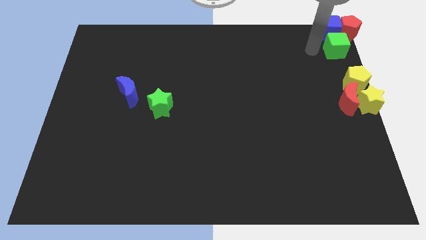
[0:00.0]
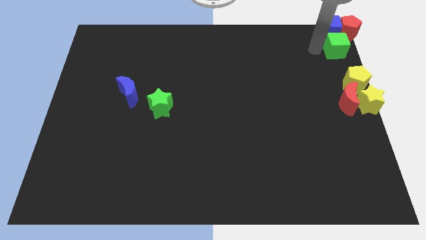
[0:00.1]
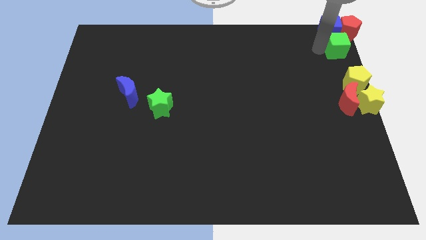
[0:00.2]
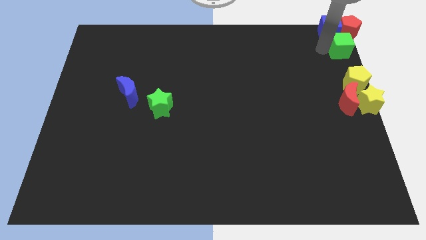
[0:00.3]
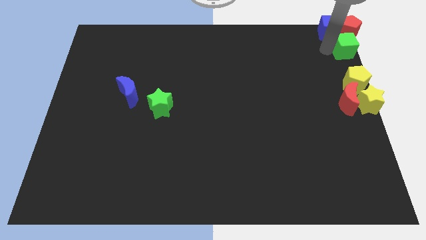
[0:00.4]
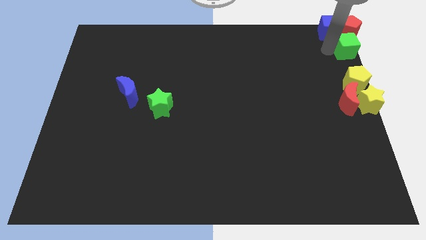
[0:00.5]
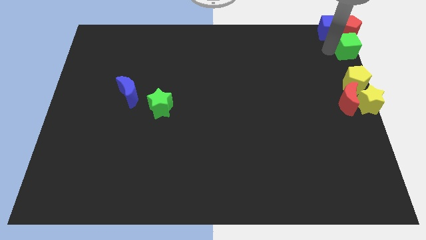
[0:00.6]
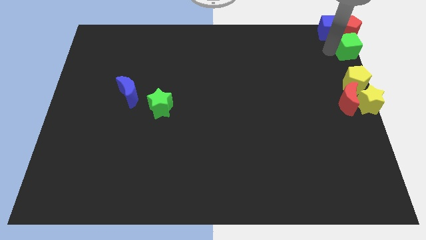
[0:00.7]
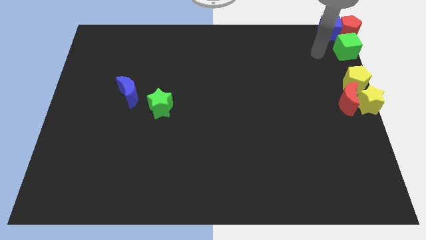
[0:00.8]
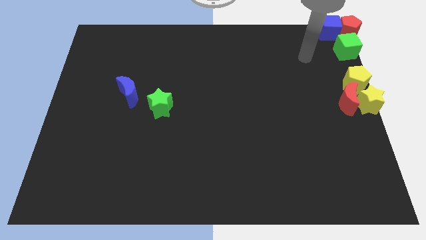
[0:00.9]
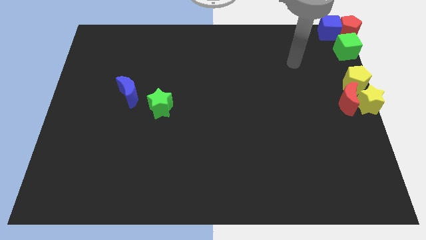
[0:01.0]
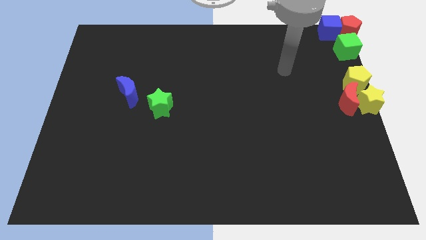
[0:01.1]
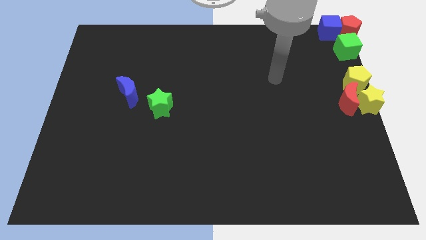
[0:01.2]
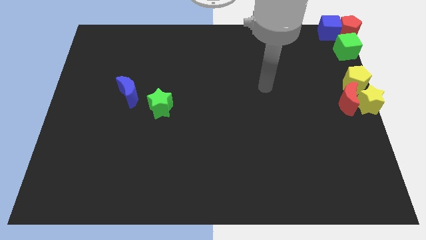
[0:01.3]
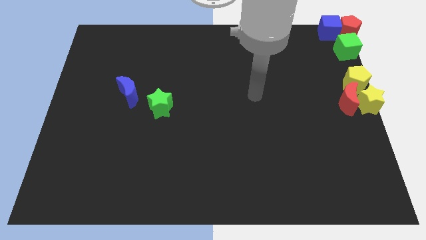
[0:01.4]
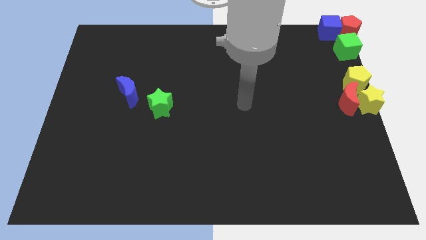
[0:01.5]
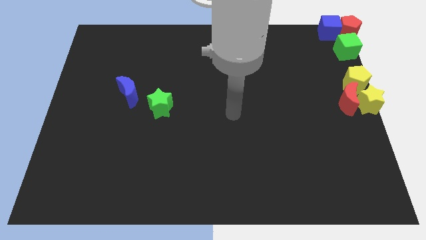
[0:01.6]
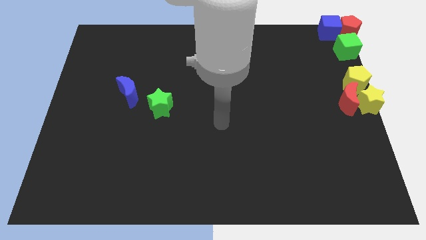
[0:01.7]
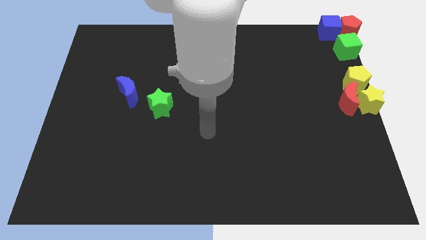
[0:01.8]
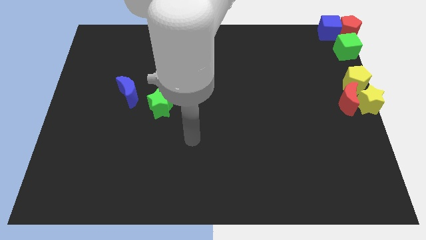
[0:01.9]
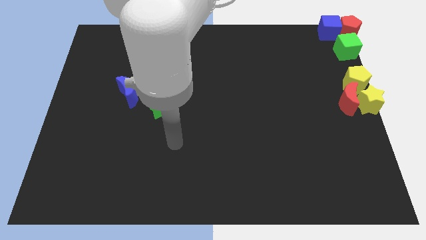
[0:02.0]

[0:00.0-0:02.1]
push the green cube to the bottom of the red pentagon

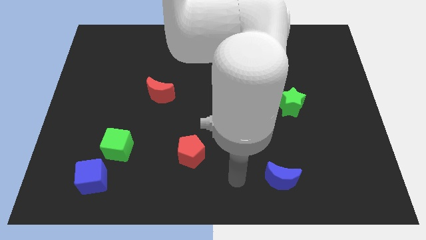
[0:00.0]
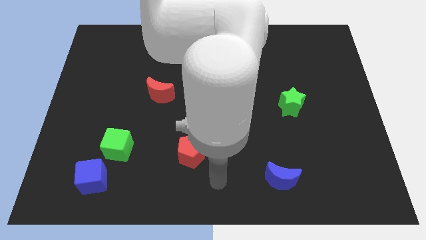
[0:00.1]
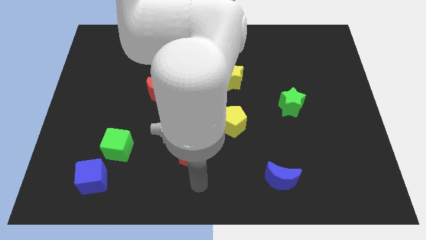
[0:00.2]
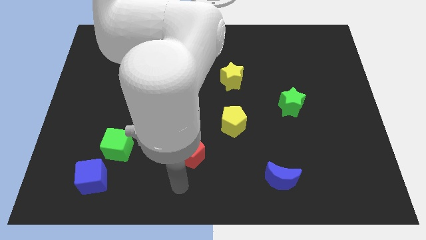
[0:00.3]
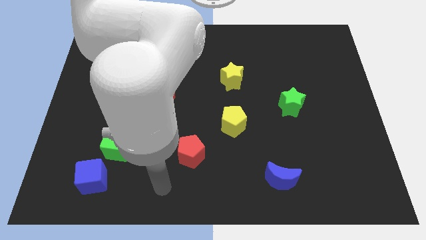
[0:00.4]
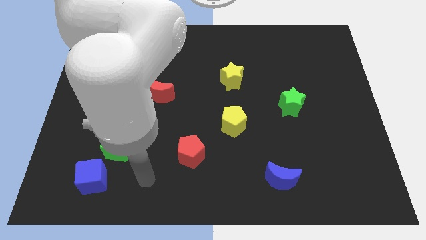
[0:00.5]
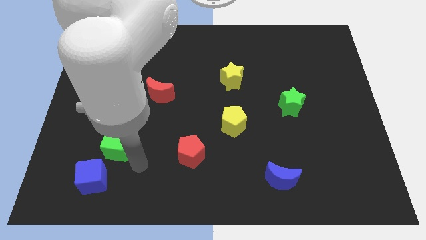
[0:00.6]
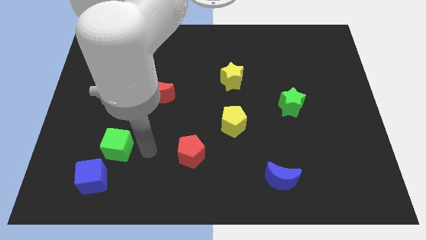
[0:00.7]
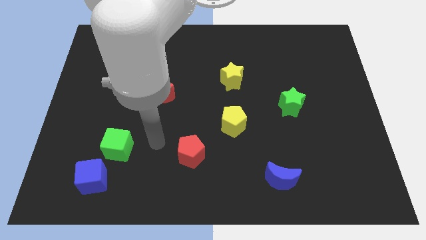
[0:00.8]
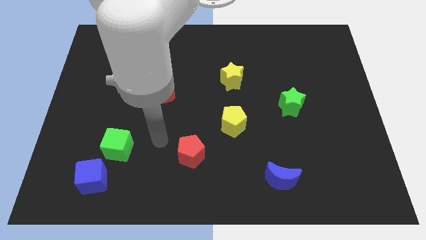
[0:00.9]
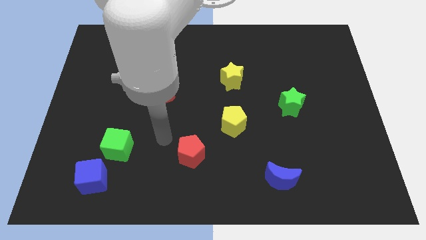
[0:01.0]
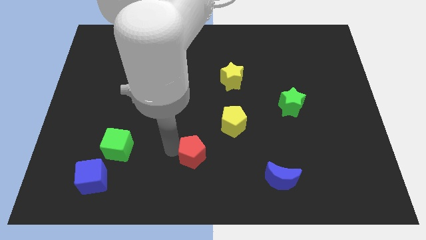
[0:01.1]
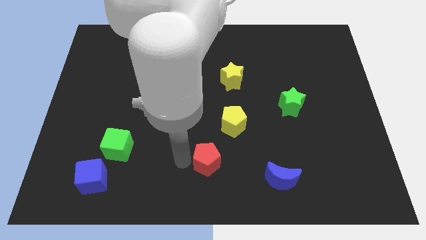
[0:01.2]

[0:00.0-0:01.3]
move your arm to the left of red pentagon

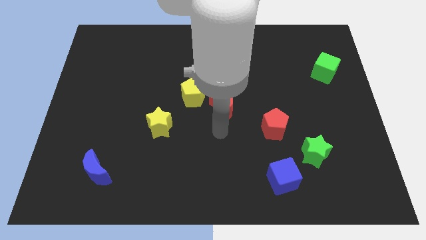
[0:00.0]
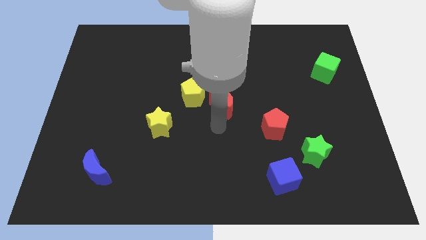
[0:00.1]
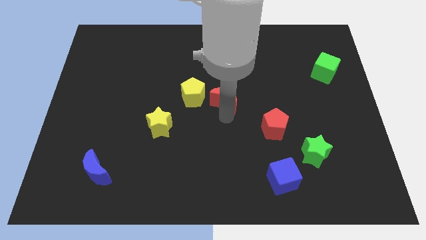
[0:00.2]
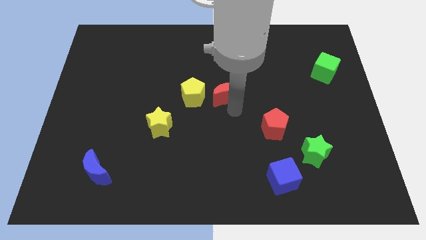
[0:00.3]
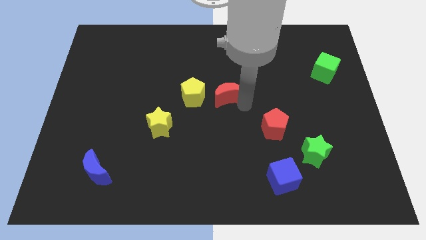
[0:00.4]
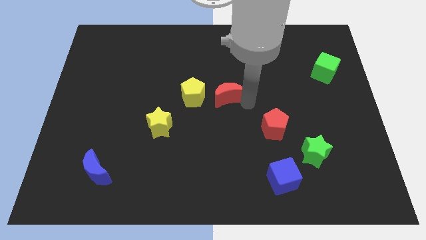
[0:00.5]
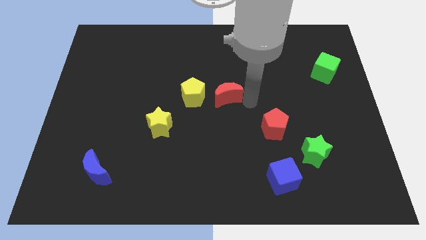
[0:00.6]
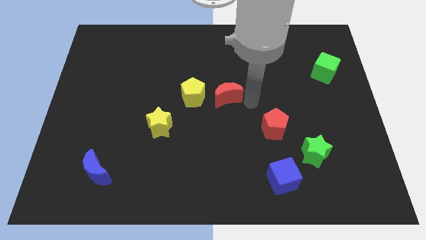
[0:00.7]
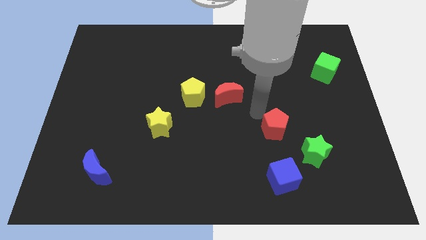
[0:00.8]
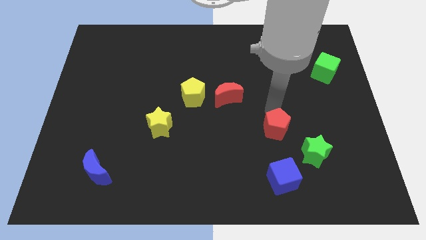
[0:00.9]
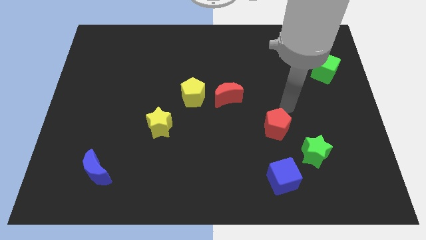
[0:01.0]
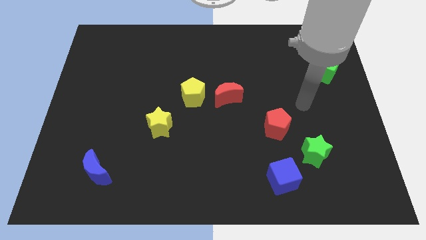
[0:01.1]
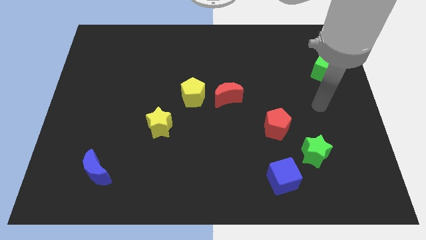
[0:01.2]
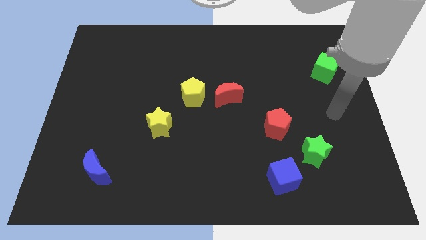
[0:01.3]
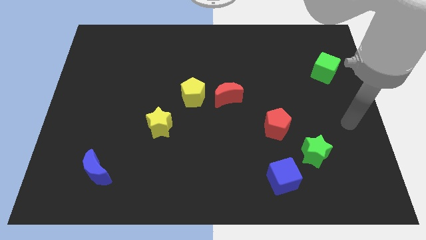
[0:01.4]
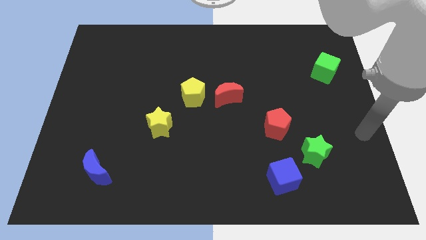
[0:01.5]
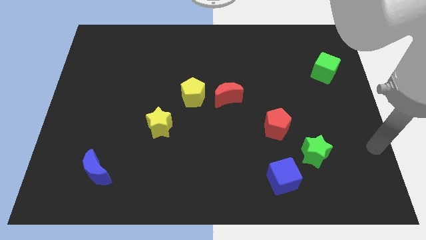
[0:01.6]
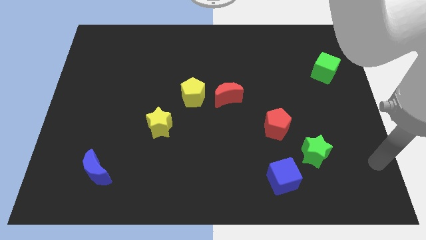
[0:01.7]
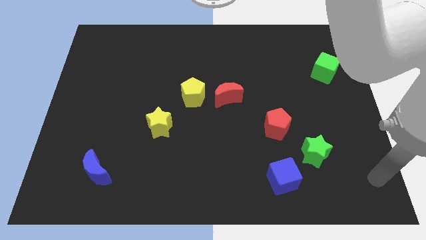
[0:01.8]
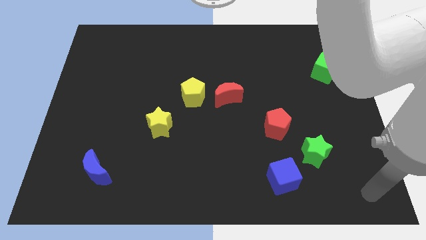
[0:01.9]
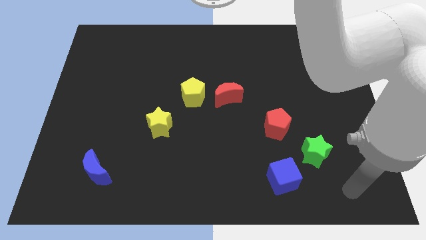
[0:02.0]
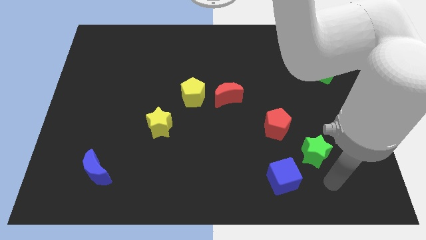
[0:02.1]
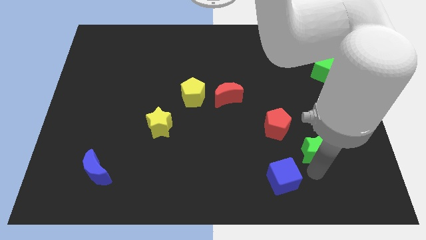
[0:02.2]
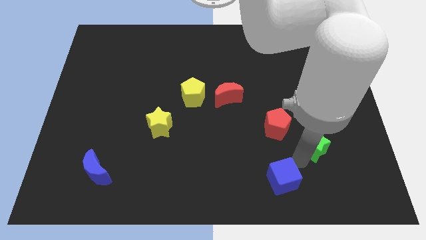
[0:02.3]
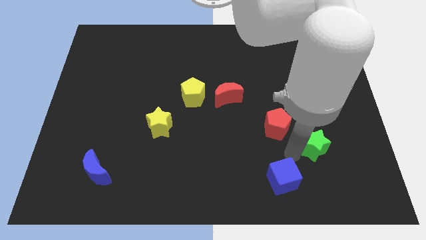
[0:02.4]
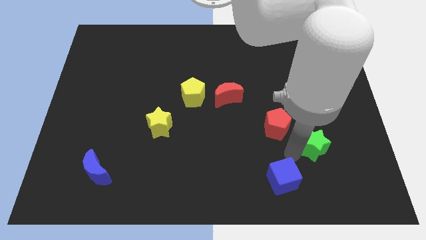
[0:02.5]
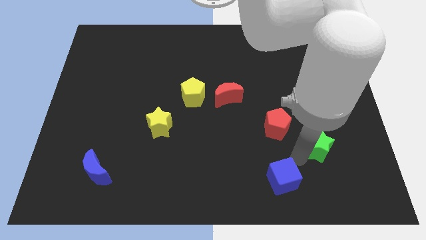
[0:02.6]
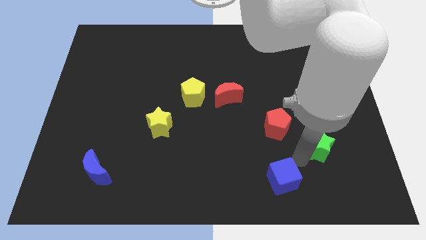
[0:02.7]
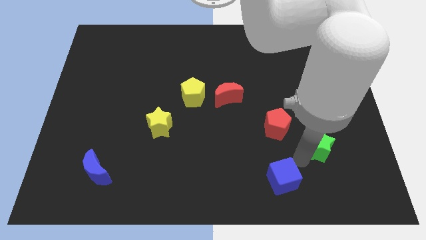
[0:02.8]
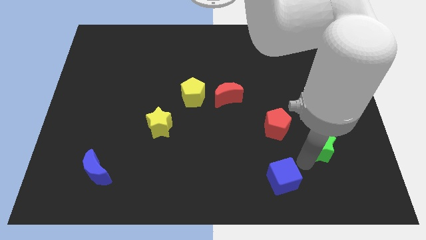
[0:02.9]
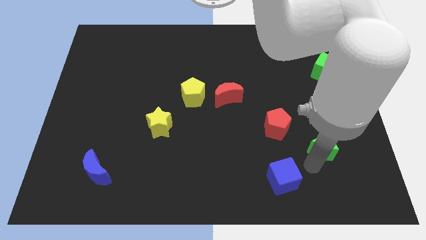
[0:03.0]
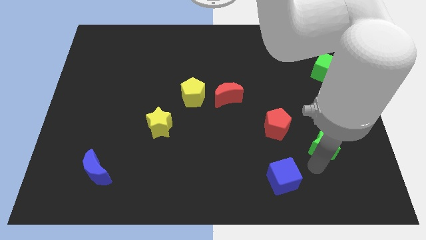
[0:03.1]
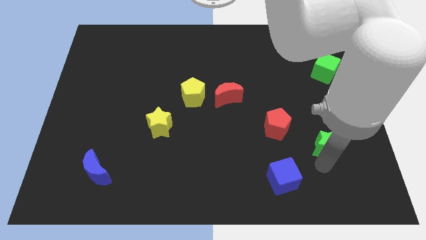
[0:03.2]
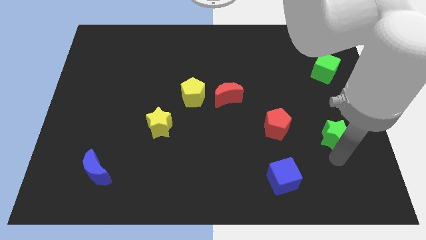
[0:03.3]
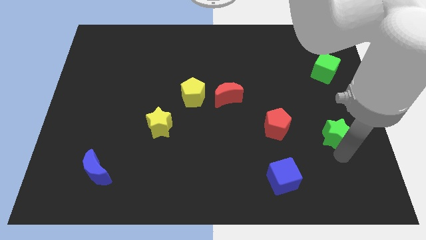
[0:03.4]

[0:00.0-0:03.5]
move your arm to the bottom left on the green star

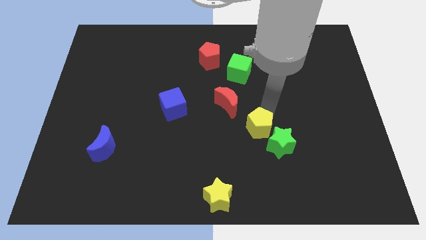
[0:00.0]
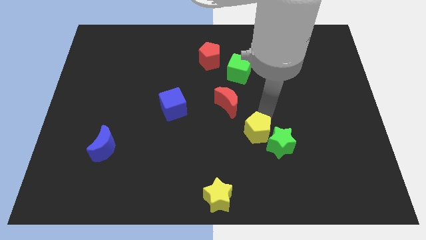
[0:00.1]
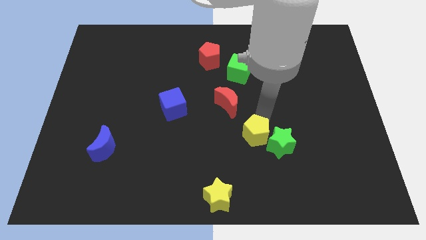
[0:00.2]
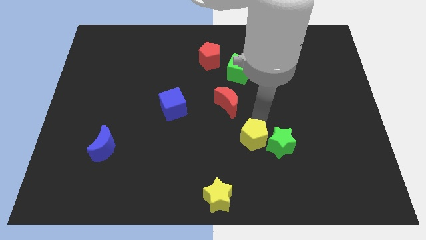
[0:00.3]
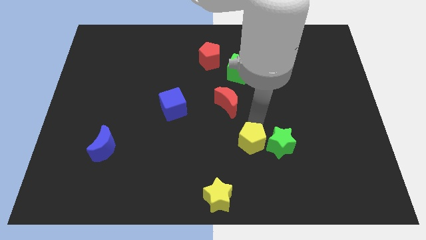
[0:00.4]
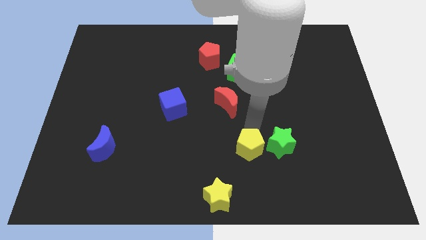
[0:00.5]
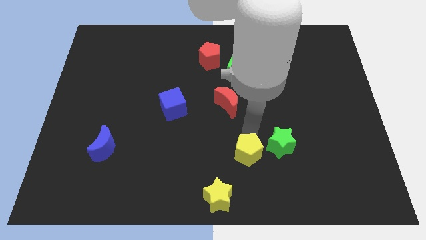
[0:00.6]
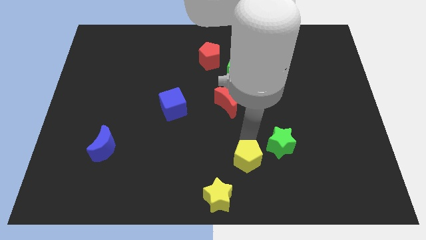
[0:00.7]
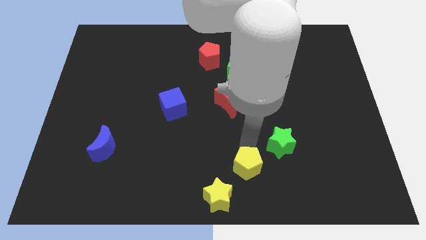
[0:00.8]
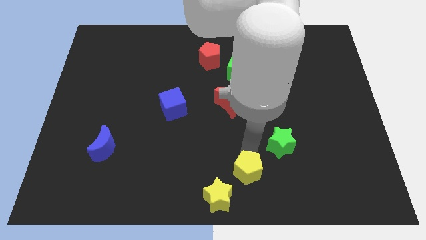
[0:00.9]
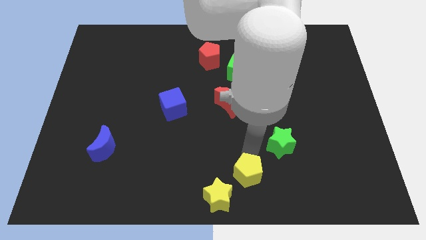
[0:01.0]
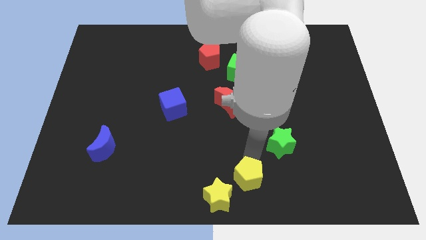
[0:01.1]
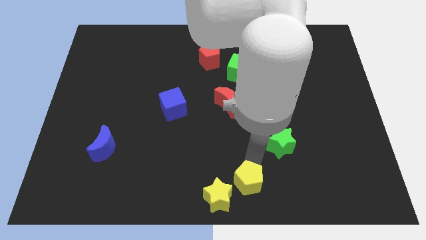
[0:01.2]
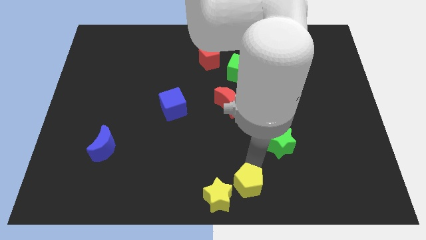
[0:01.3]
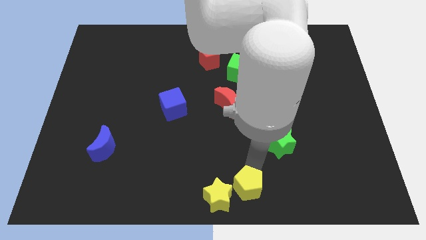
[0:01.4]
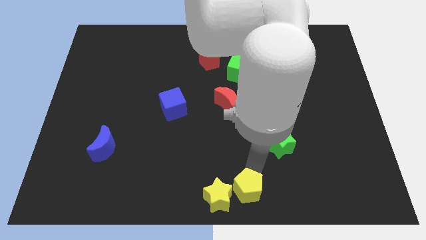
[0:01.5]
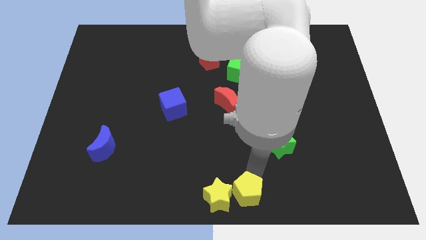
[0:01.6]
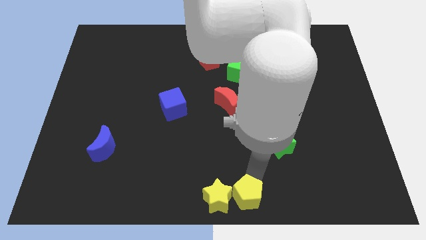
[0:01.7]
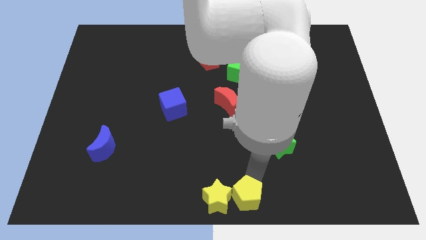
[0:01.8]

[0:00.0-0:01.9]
place the yellow pentagon close to the yellow star
